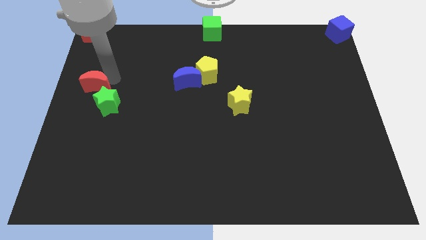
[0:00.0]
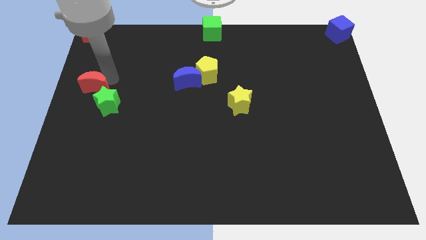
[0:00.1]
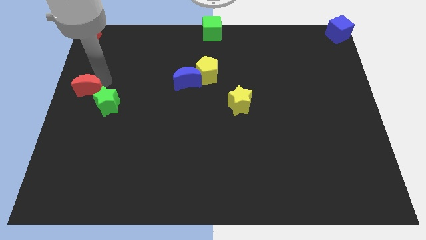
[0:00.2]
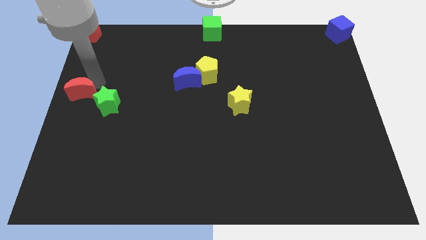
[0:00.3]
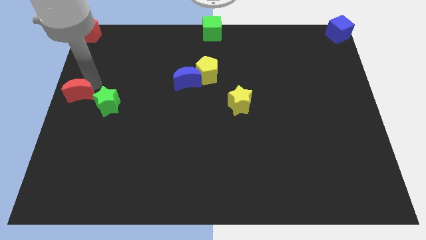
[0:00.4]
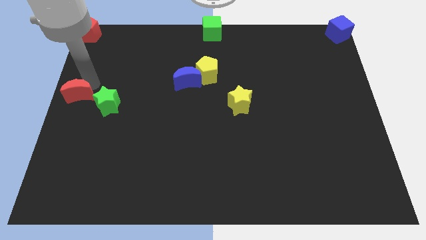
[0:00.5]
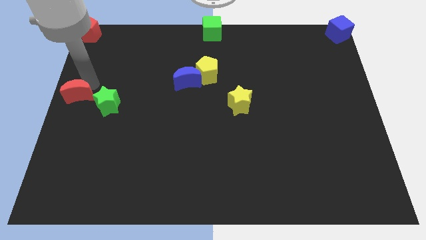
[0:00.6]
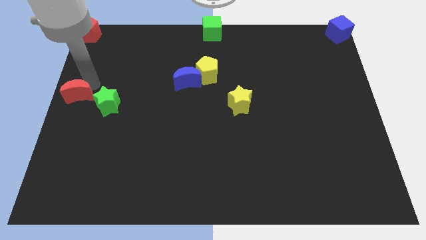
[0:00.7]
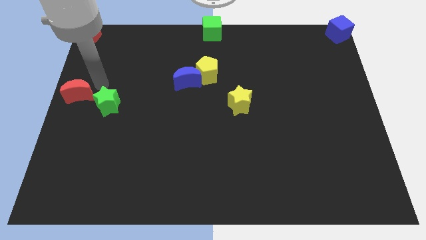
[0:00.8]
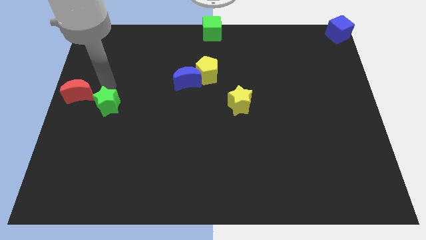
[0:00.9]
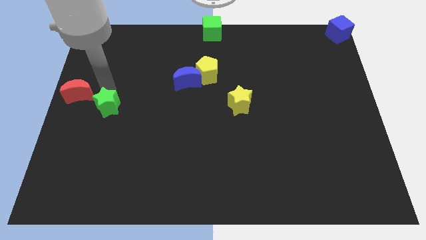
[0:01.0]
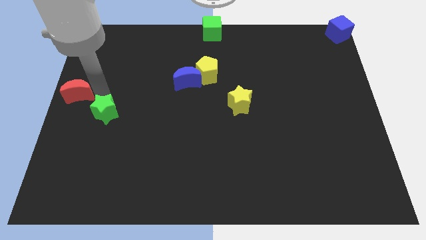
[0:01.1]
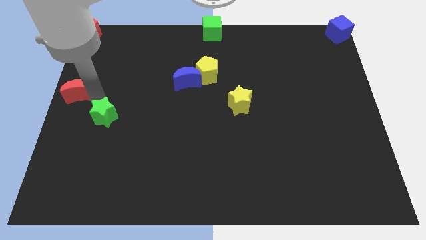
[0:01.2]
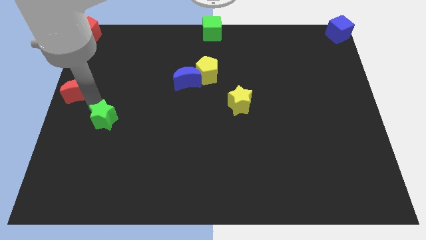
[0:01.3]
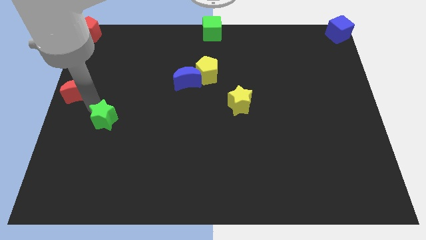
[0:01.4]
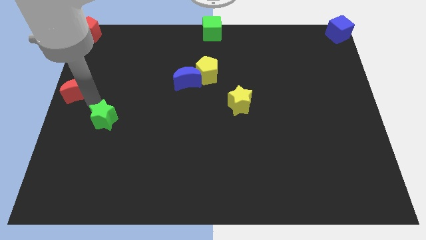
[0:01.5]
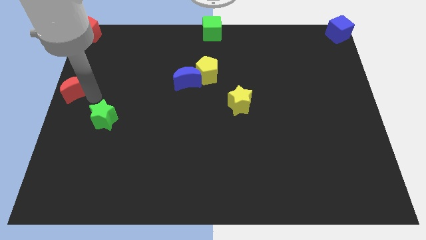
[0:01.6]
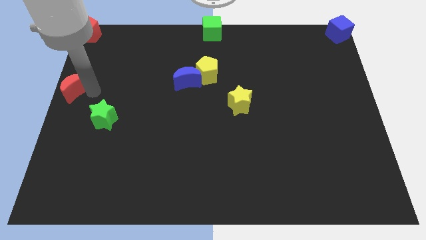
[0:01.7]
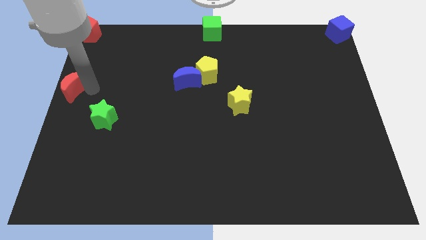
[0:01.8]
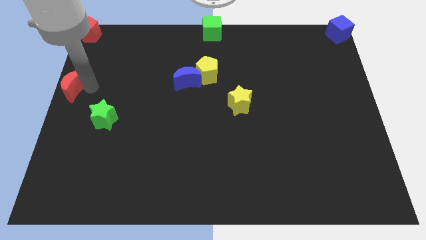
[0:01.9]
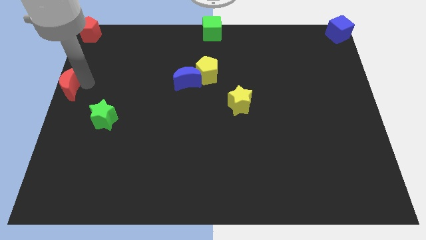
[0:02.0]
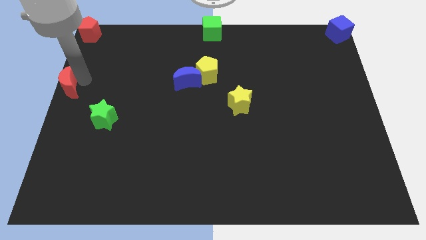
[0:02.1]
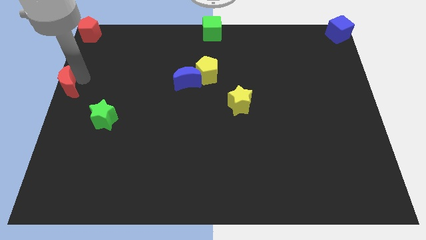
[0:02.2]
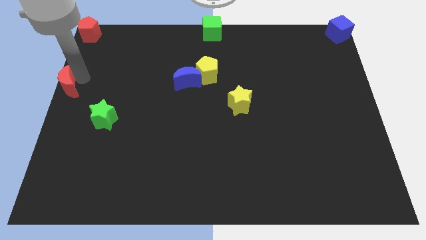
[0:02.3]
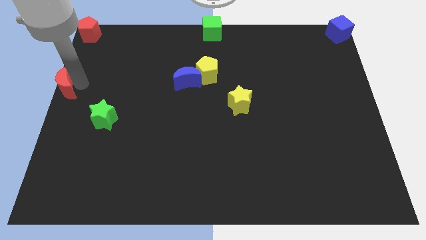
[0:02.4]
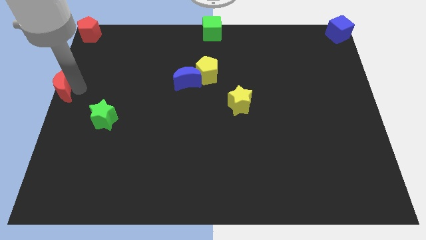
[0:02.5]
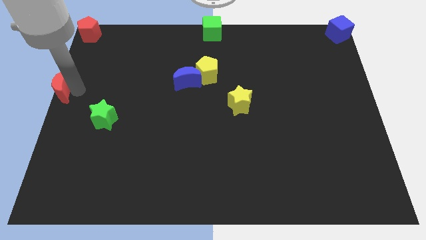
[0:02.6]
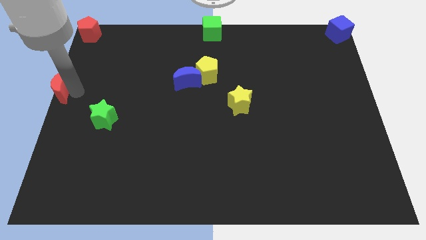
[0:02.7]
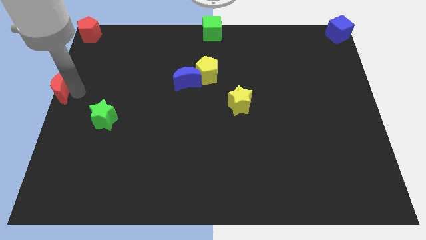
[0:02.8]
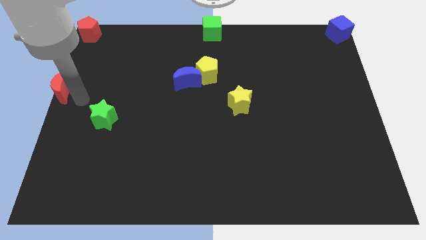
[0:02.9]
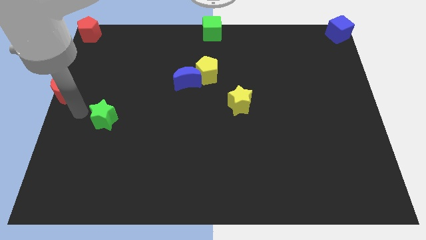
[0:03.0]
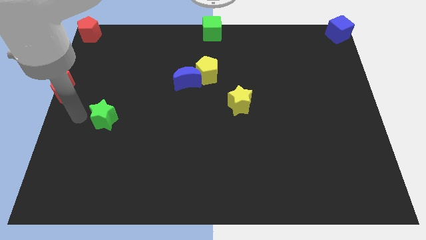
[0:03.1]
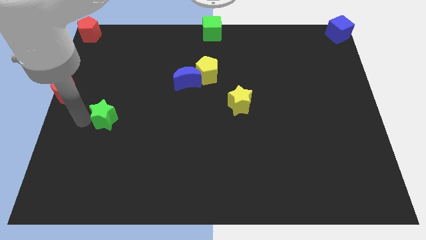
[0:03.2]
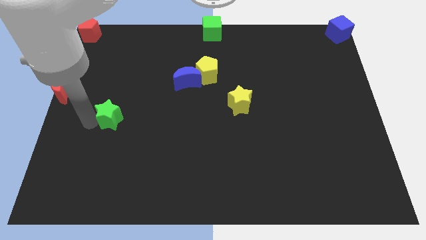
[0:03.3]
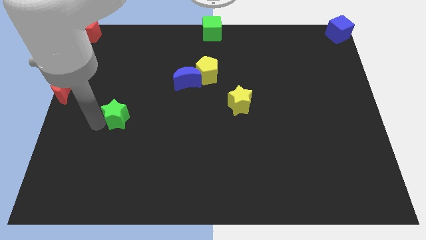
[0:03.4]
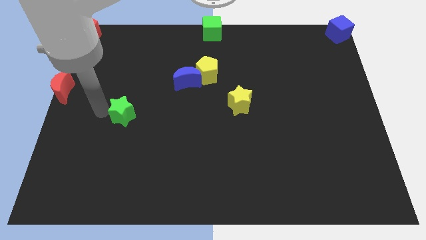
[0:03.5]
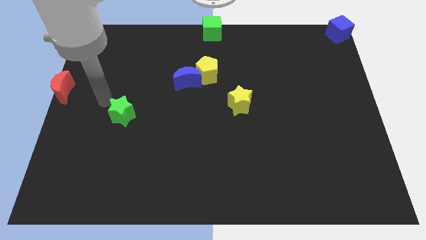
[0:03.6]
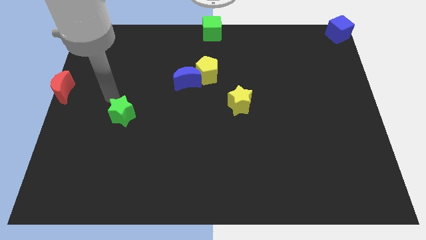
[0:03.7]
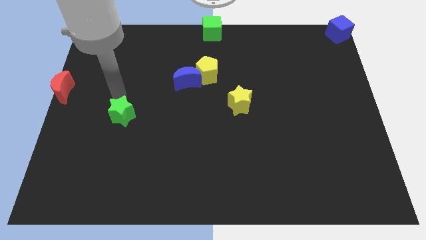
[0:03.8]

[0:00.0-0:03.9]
separate the green star and the red crescent

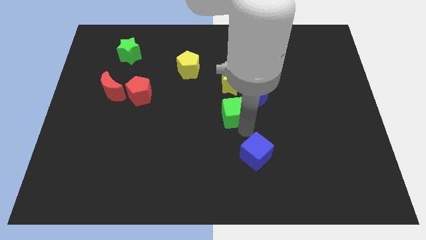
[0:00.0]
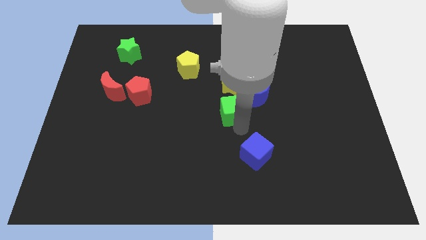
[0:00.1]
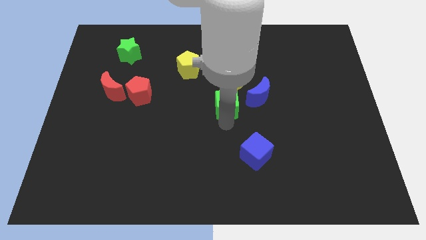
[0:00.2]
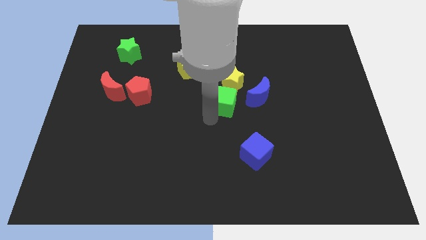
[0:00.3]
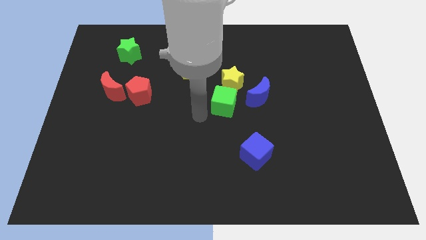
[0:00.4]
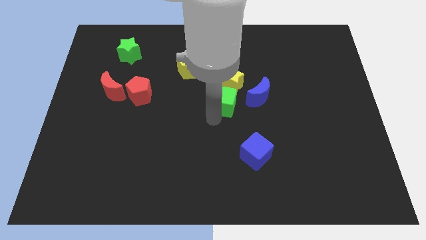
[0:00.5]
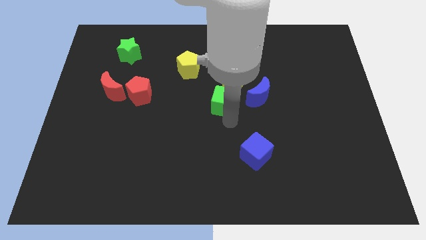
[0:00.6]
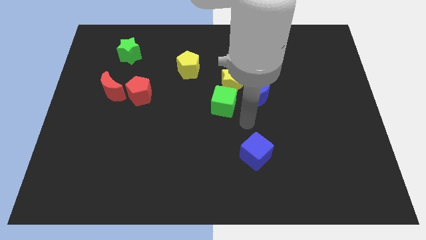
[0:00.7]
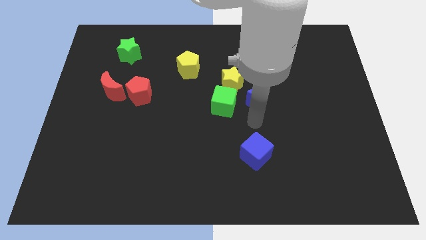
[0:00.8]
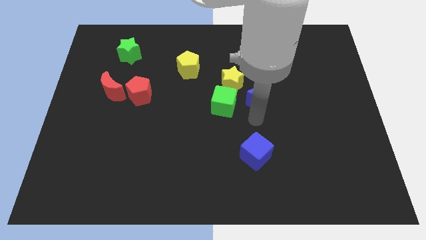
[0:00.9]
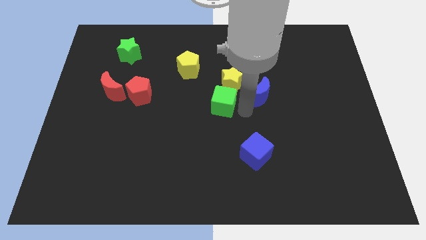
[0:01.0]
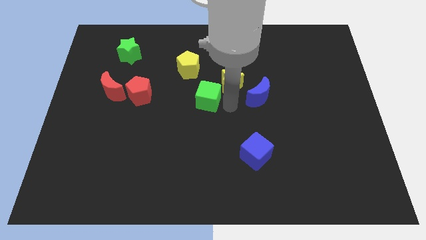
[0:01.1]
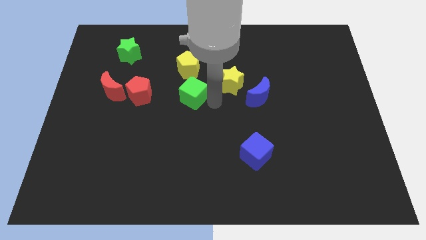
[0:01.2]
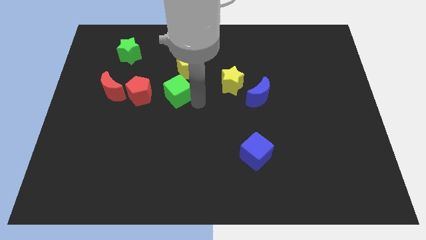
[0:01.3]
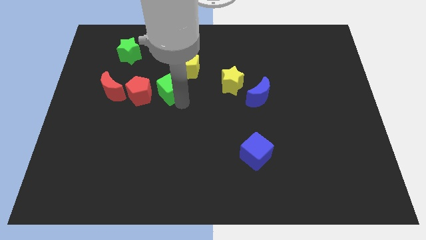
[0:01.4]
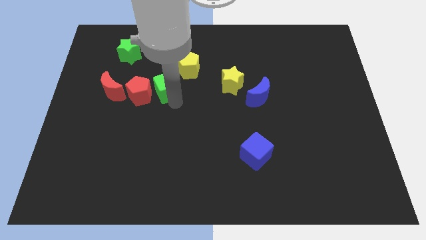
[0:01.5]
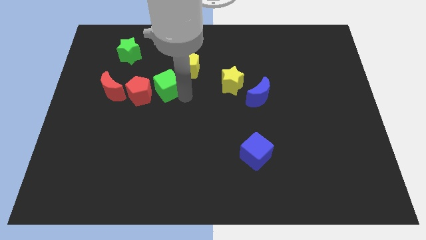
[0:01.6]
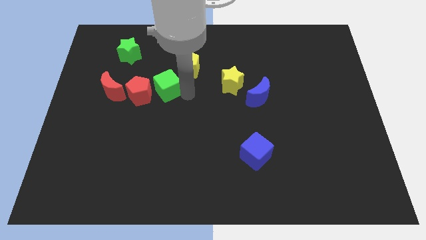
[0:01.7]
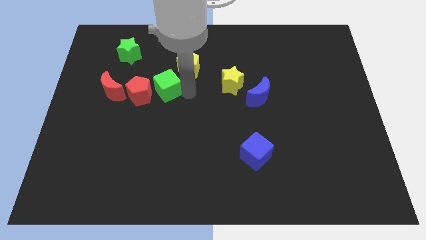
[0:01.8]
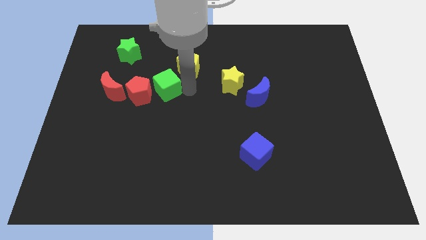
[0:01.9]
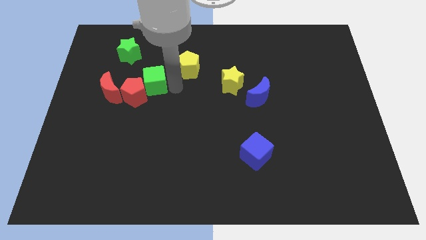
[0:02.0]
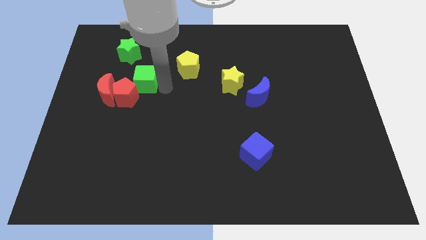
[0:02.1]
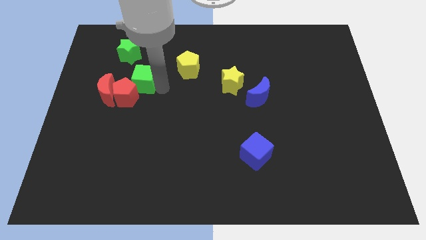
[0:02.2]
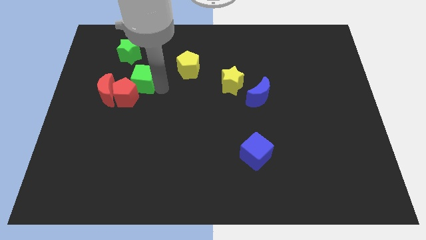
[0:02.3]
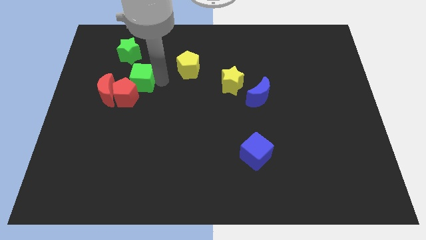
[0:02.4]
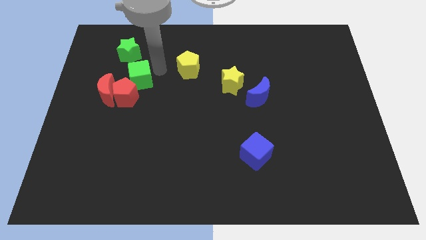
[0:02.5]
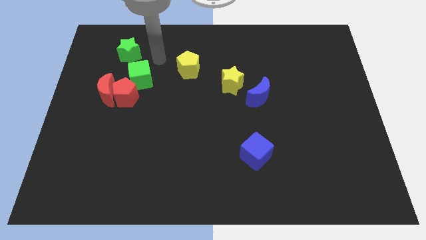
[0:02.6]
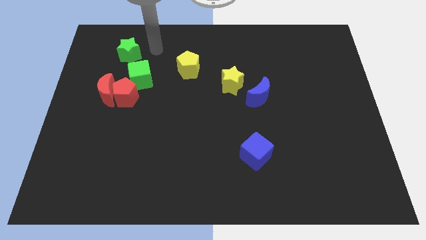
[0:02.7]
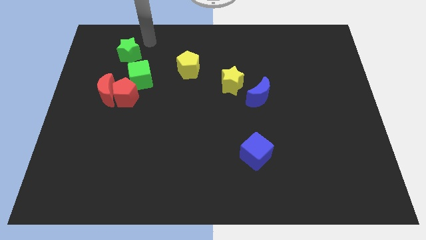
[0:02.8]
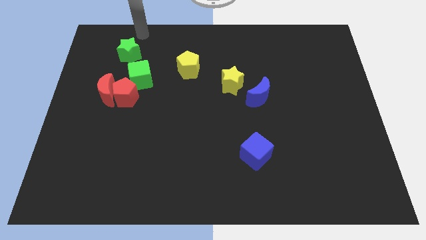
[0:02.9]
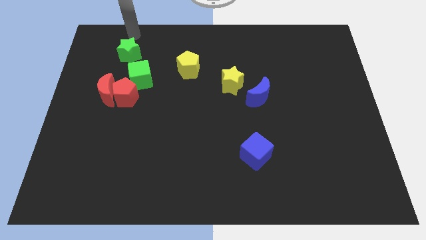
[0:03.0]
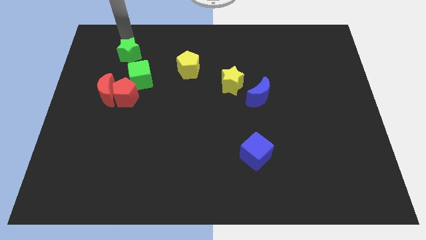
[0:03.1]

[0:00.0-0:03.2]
move green cube top right to the red pentagon

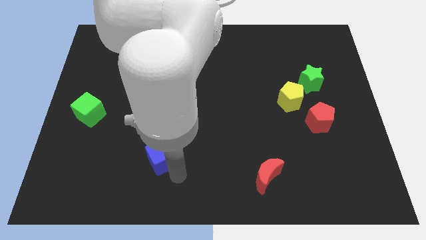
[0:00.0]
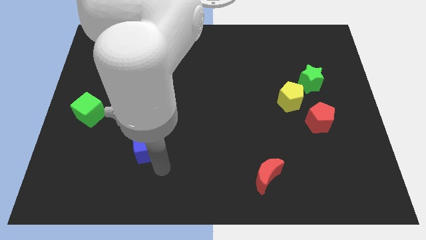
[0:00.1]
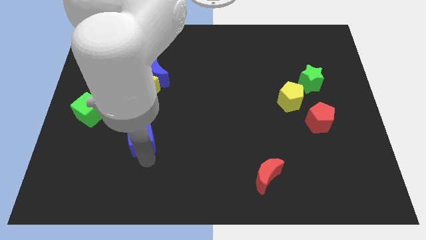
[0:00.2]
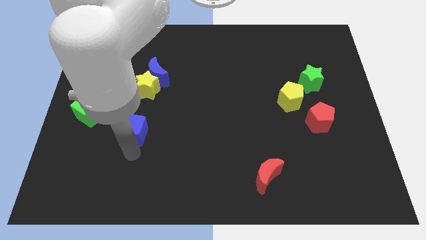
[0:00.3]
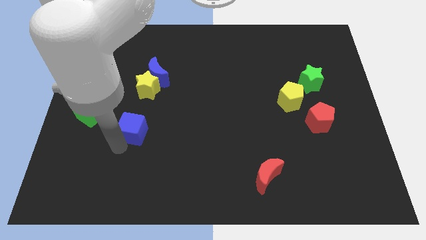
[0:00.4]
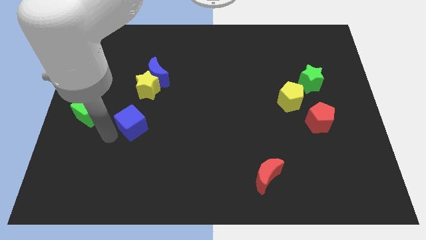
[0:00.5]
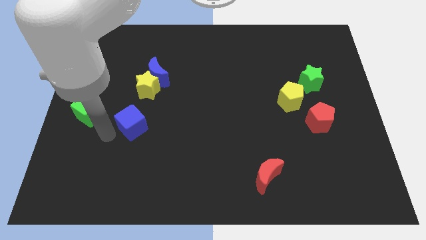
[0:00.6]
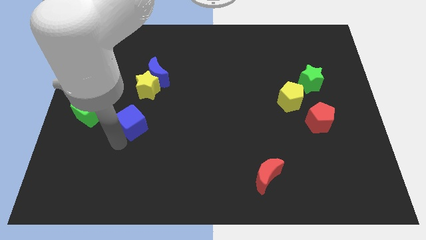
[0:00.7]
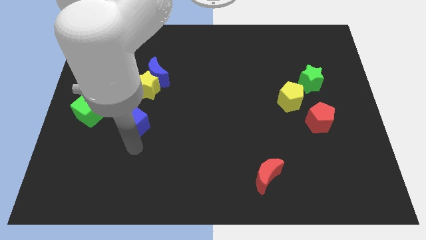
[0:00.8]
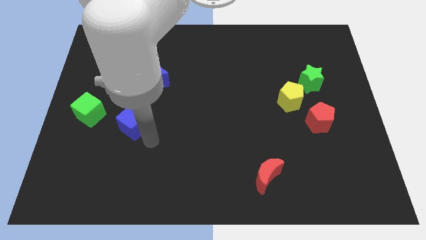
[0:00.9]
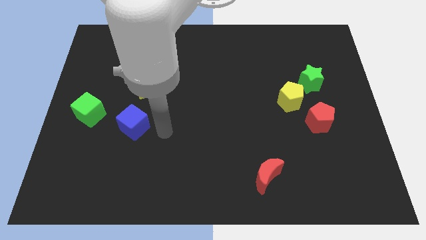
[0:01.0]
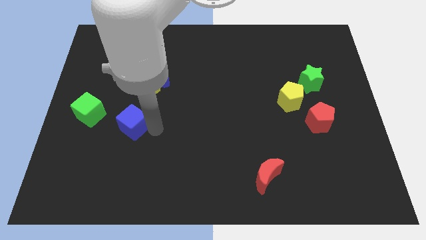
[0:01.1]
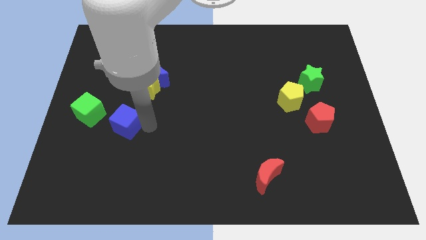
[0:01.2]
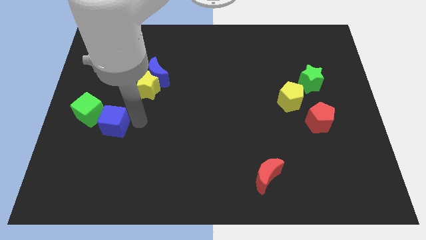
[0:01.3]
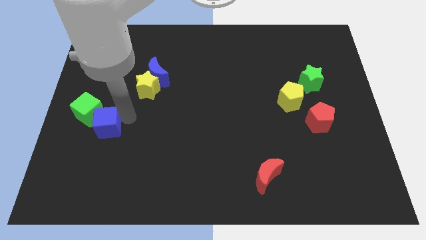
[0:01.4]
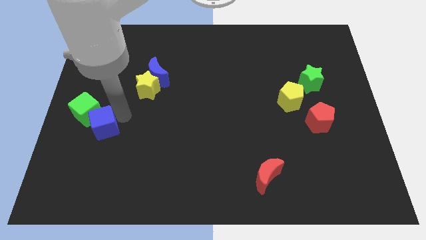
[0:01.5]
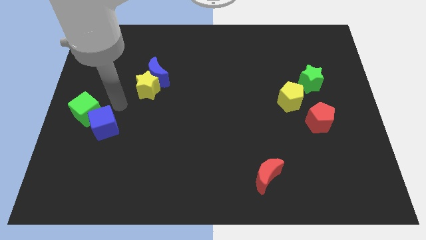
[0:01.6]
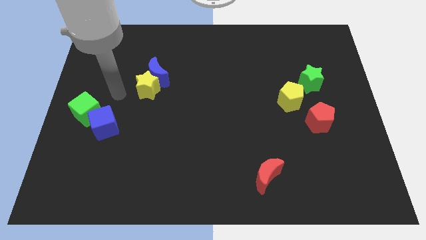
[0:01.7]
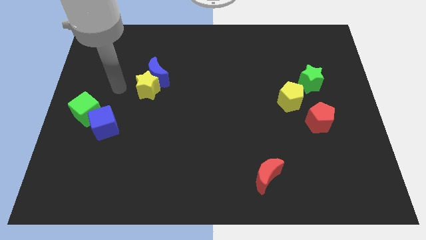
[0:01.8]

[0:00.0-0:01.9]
push the blue cube into the green cube
